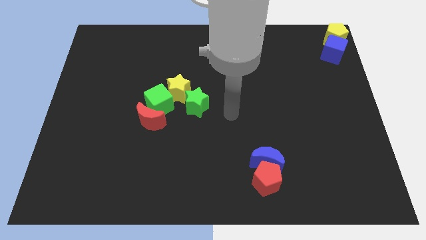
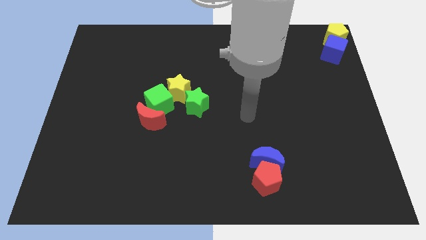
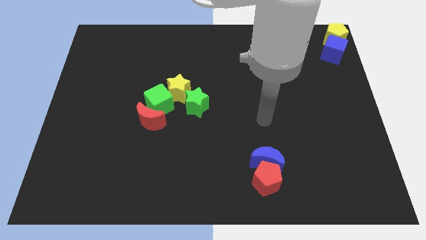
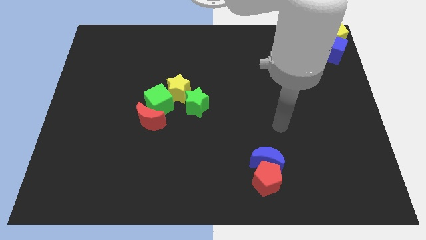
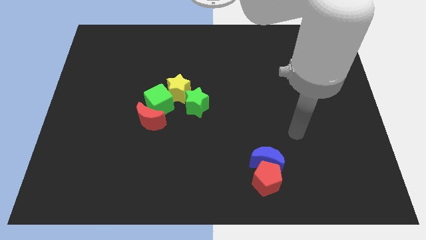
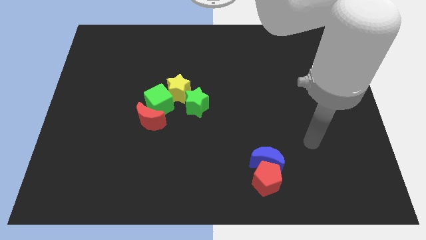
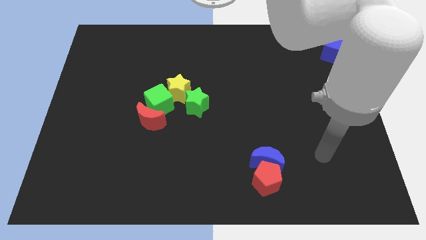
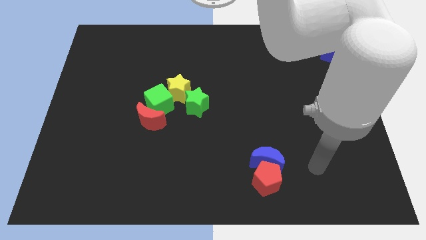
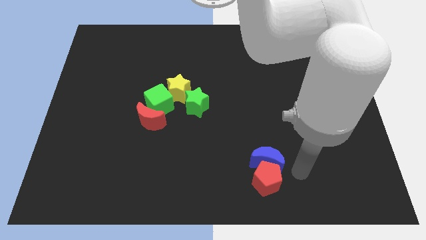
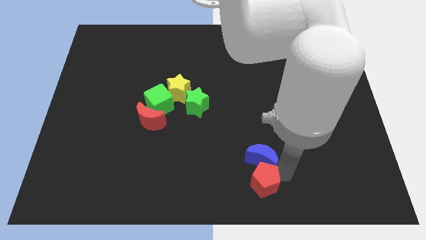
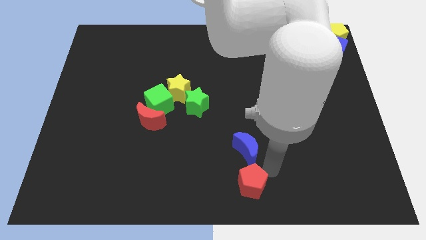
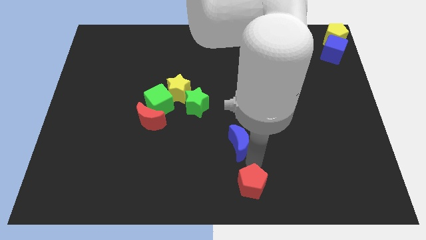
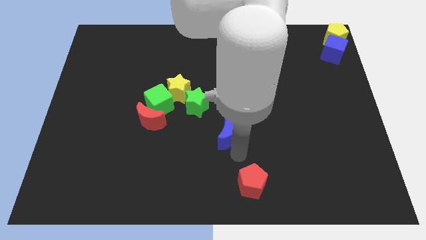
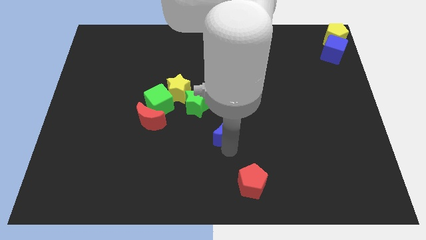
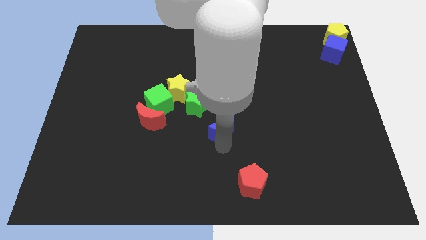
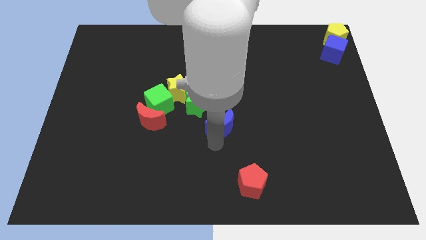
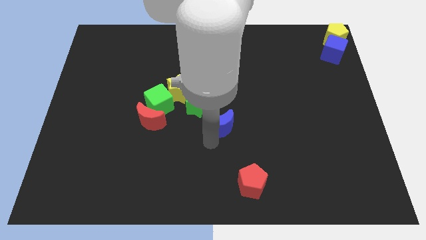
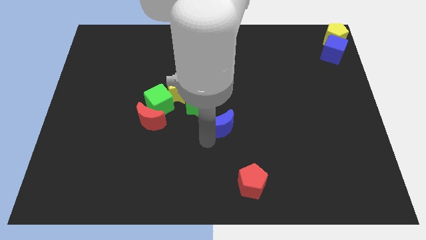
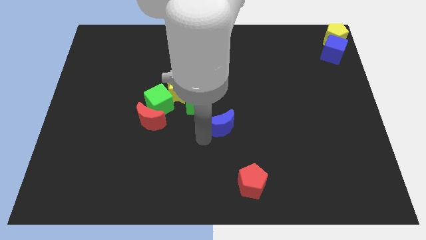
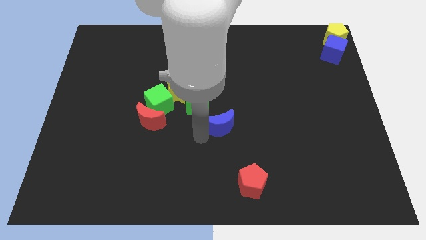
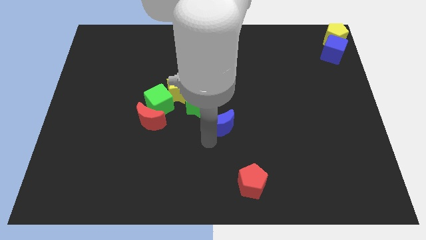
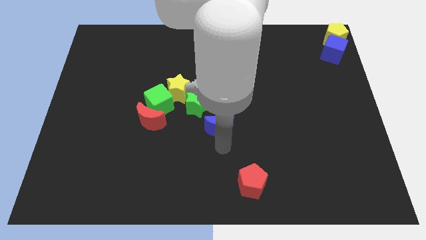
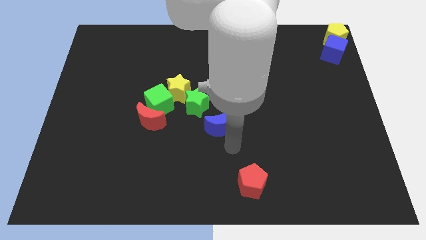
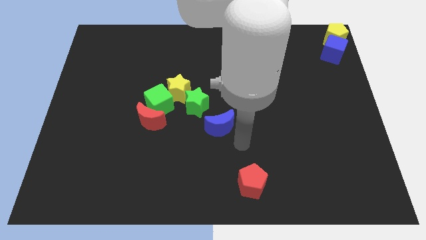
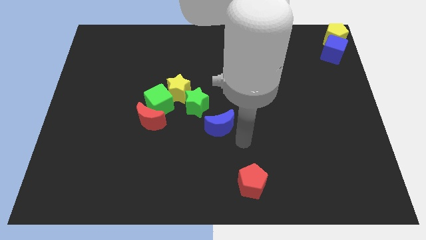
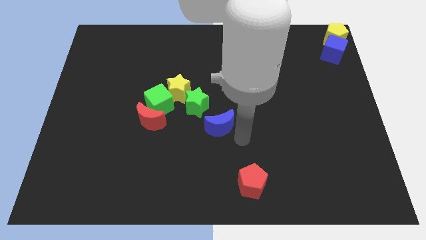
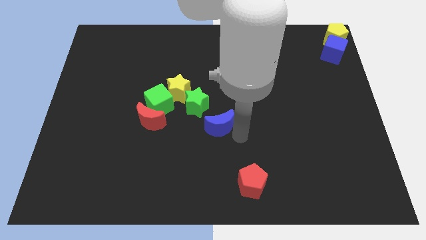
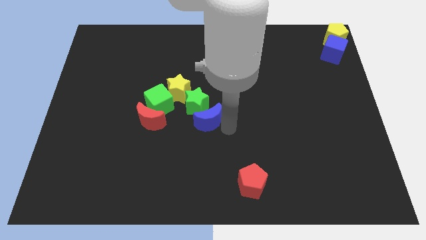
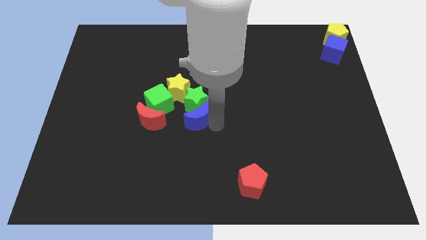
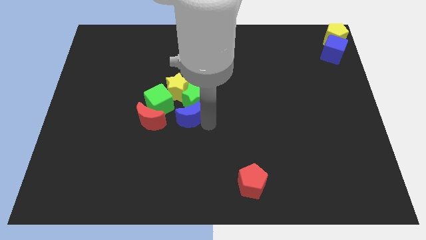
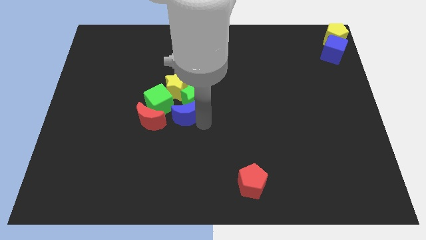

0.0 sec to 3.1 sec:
push the blue crescent into the green star and green cube

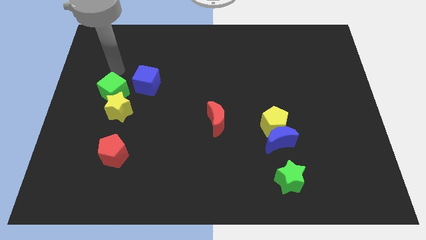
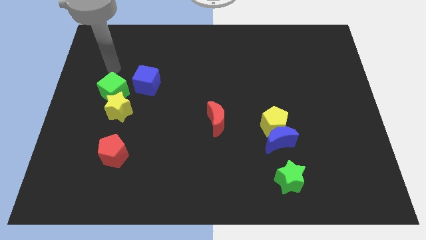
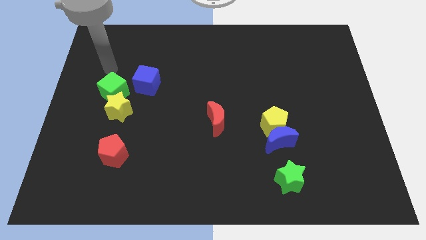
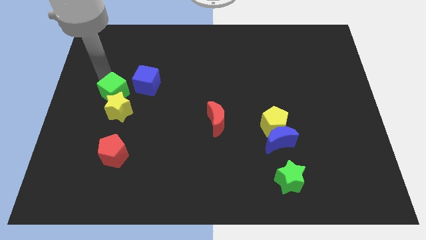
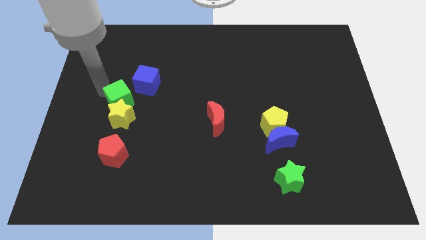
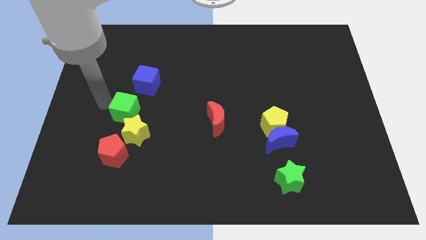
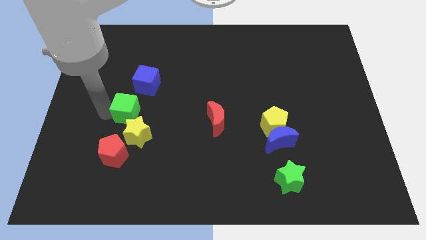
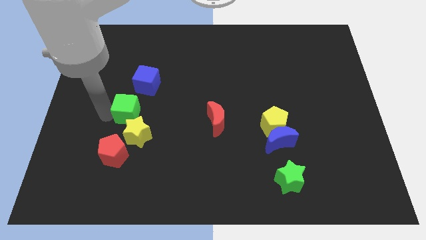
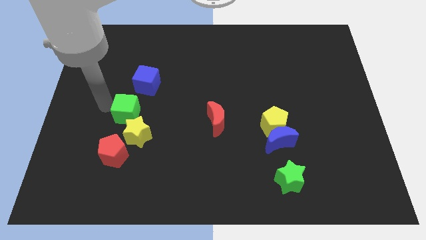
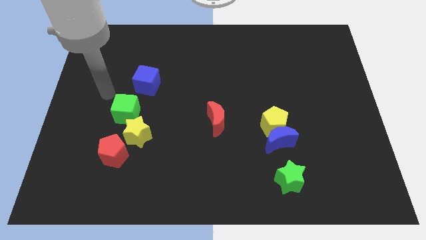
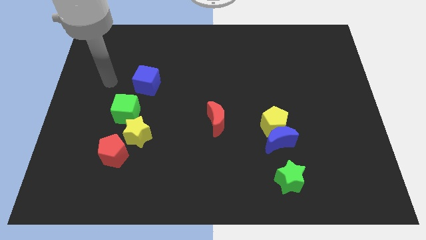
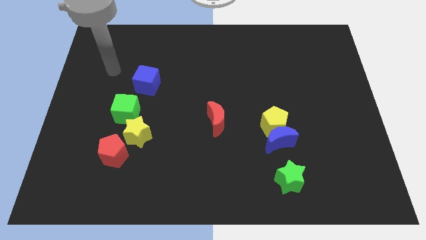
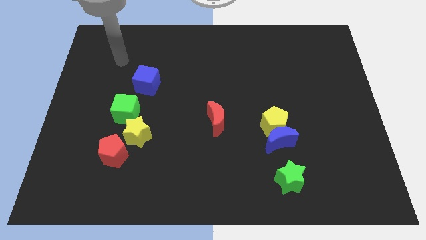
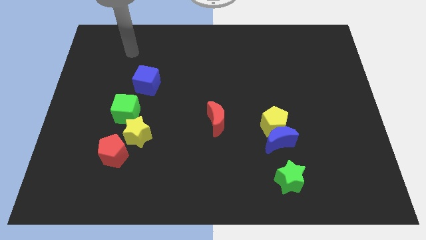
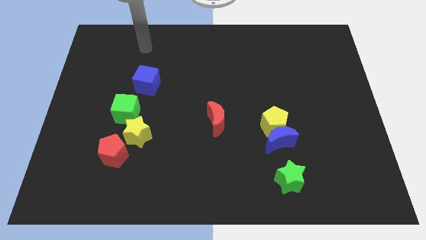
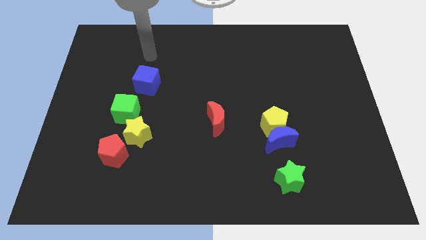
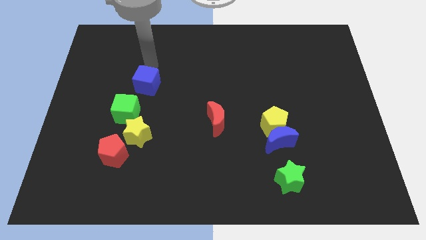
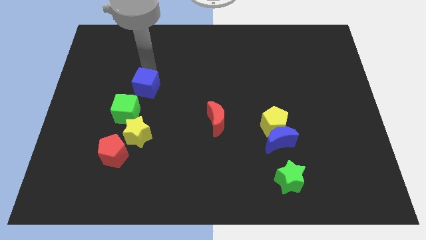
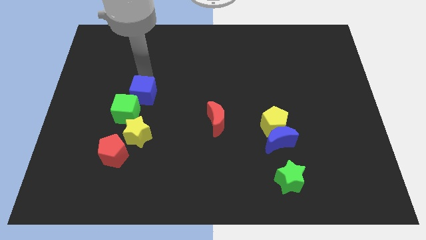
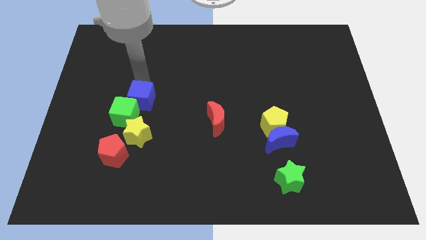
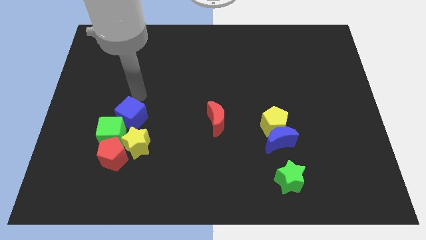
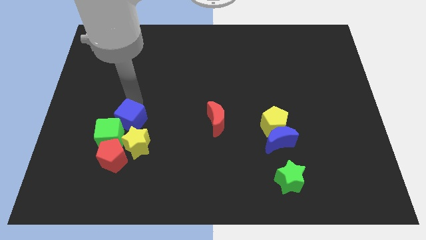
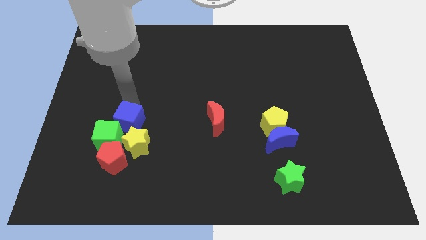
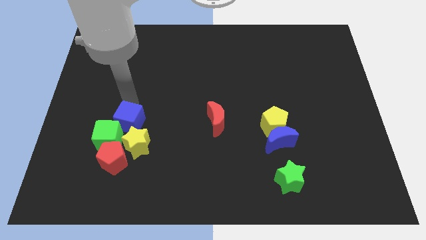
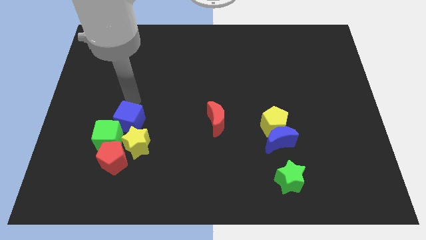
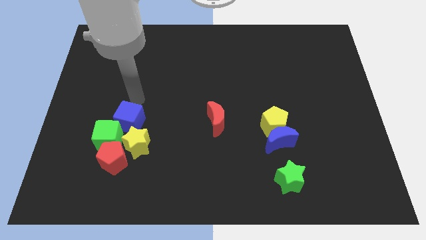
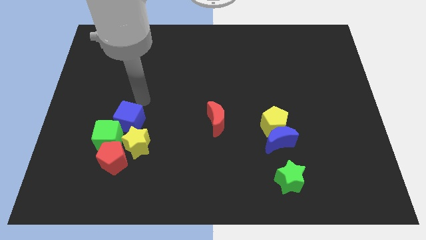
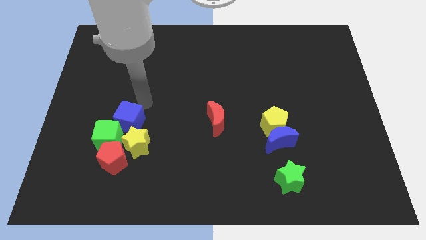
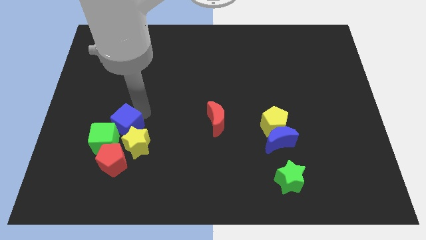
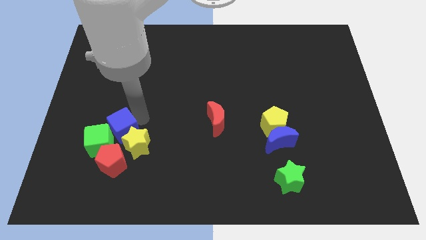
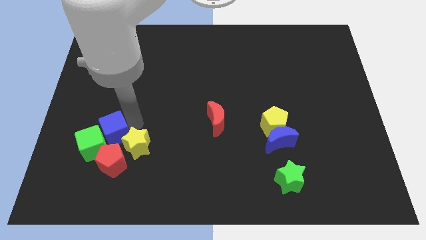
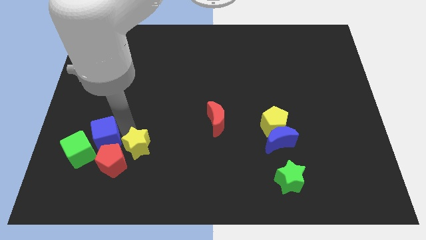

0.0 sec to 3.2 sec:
make a group of blocks using both the cubes yellow star and red pentagon

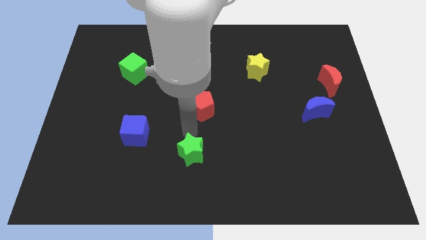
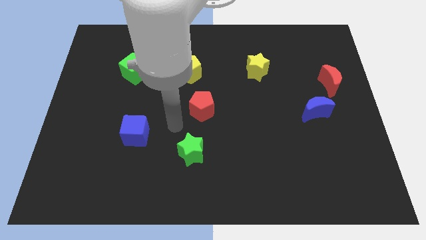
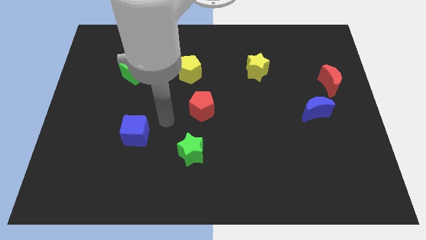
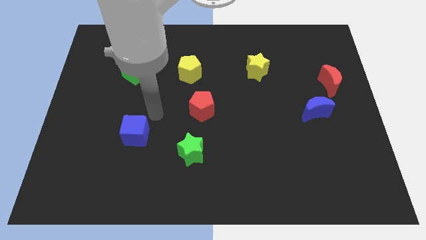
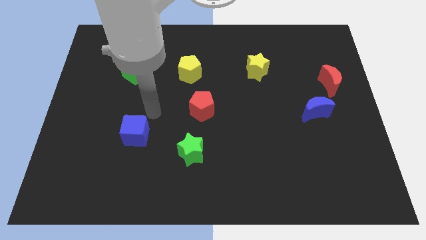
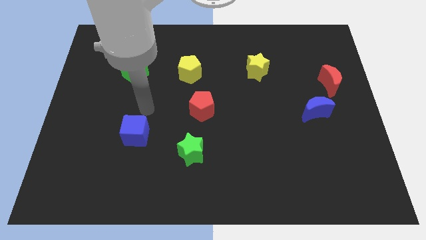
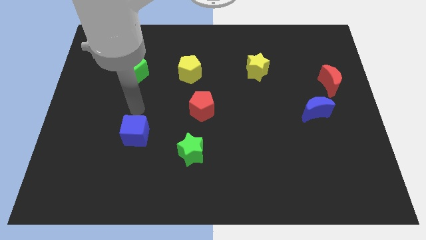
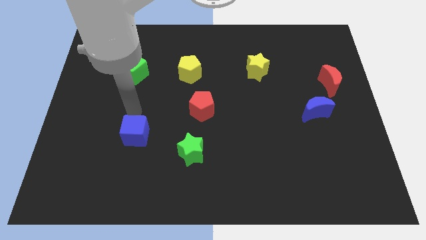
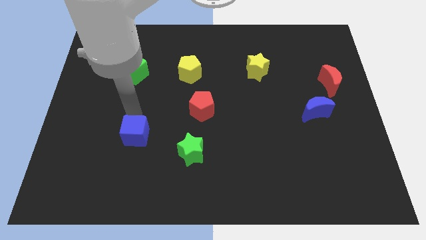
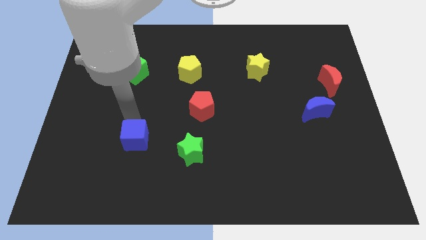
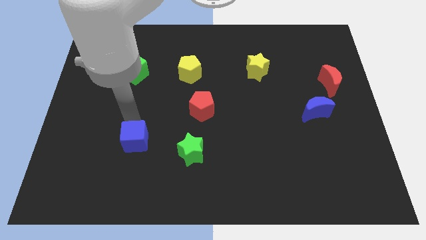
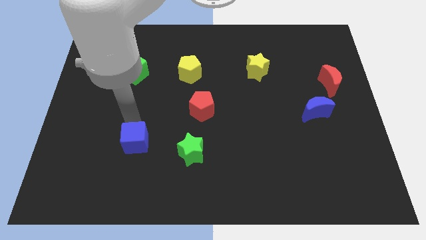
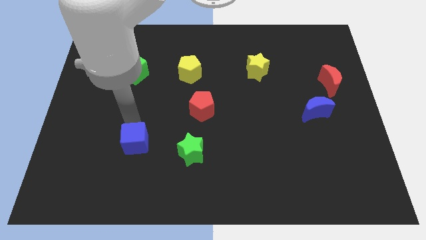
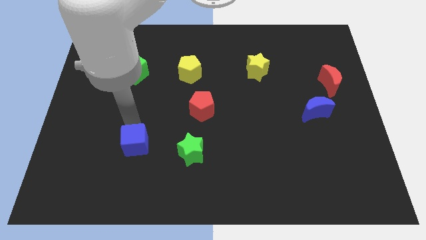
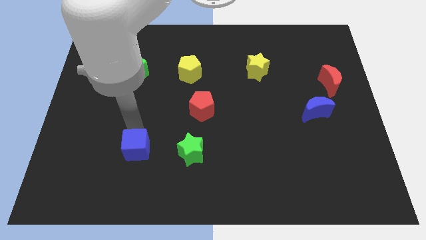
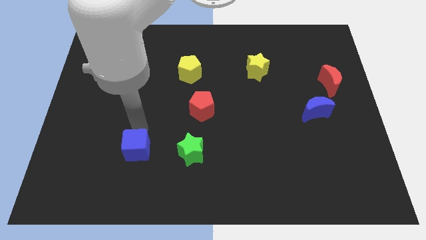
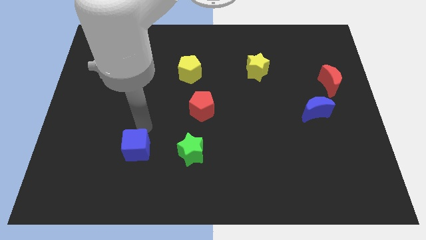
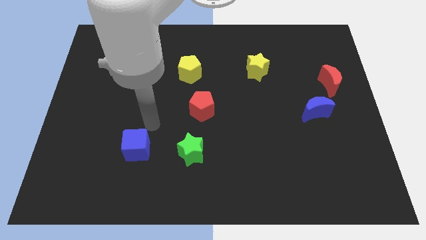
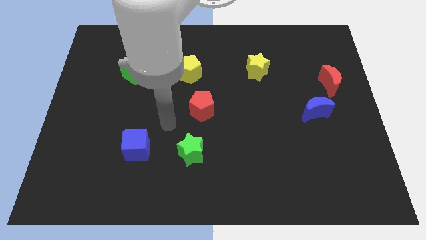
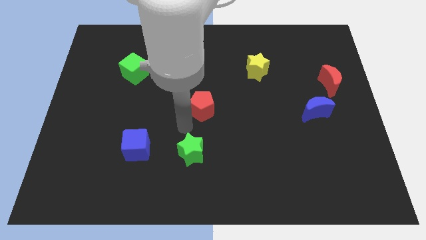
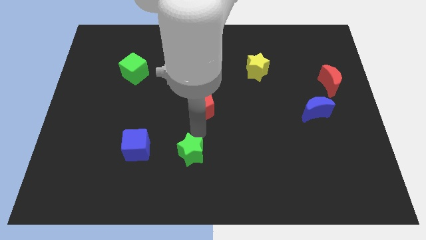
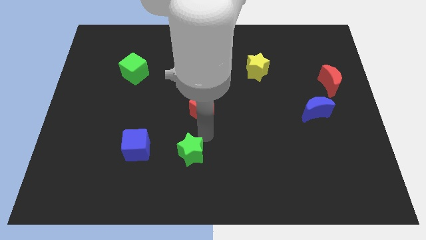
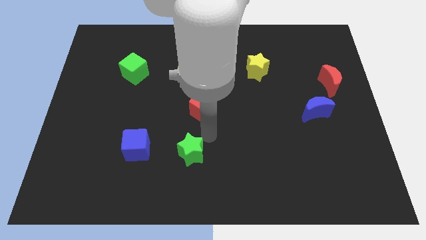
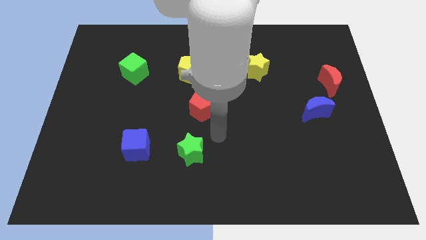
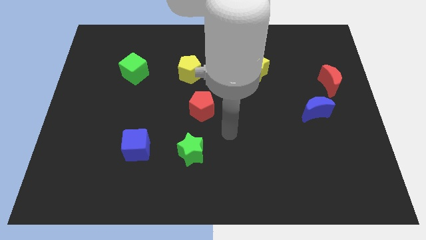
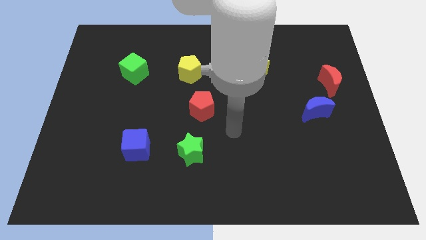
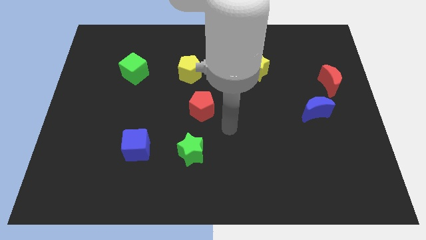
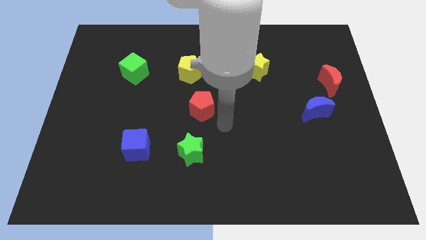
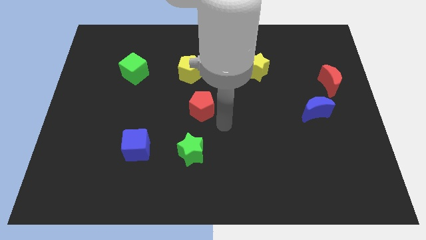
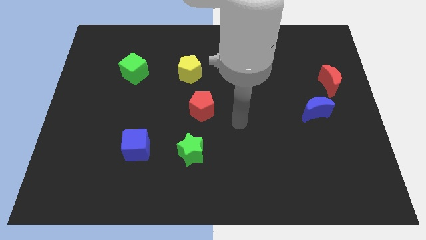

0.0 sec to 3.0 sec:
move the blue cube close to the green star
